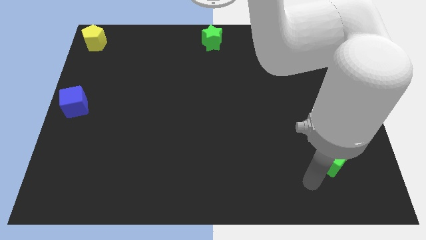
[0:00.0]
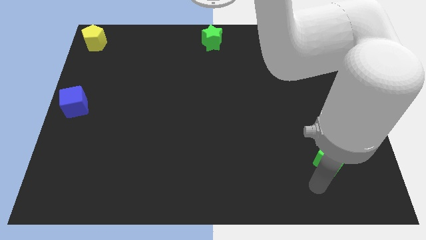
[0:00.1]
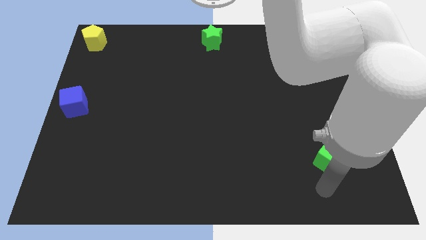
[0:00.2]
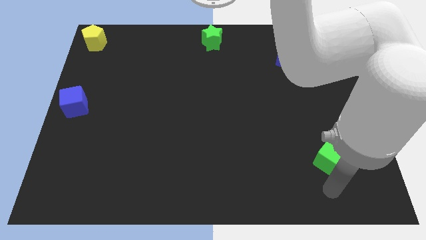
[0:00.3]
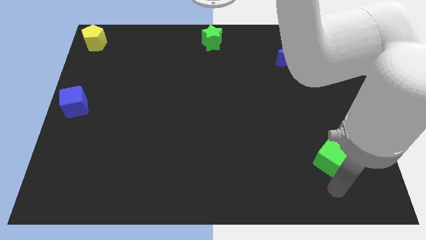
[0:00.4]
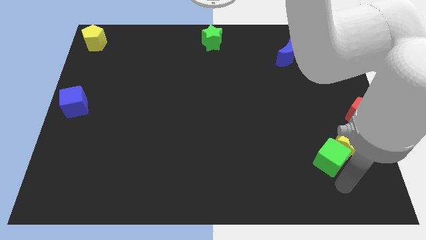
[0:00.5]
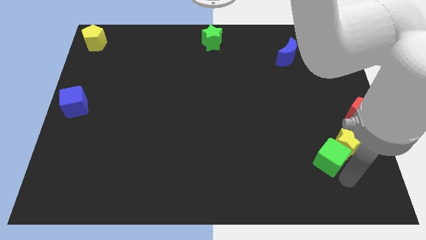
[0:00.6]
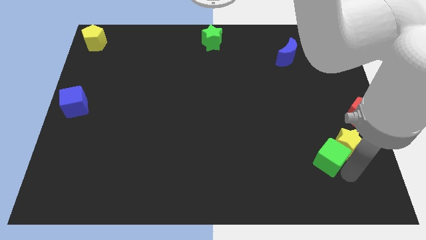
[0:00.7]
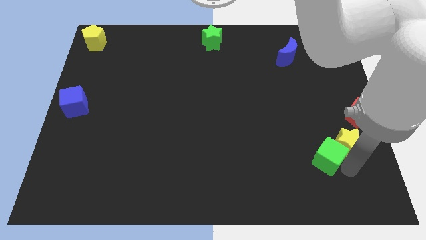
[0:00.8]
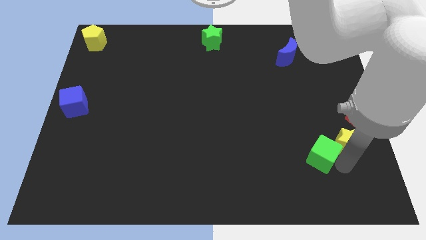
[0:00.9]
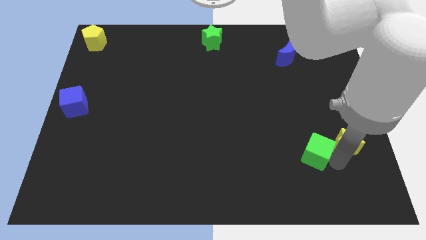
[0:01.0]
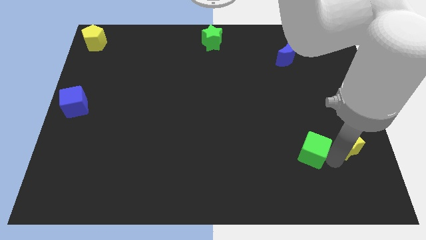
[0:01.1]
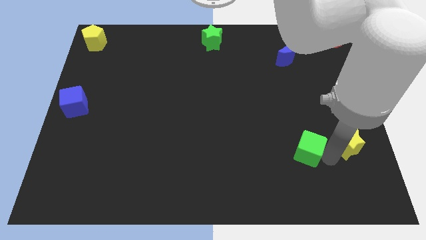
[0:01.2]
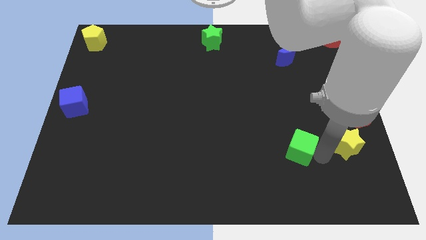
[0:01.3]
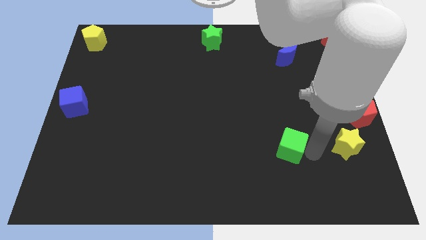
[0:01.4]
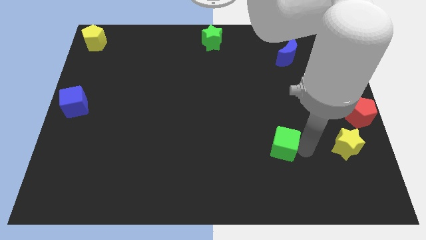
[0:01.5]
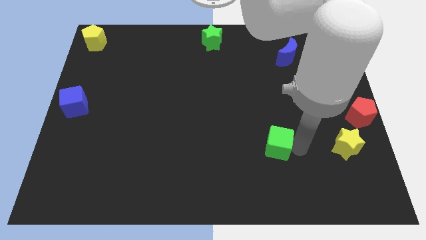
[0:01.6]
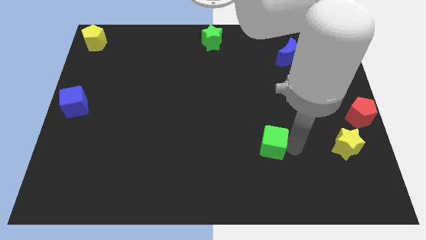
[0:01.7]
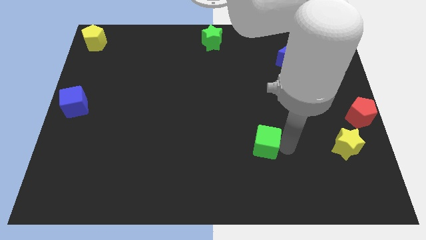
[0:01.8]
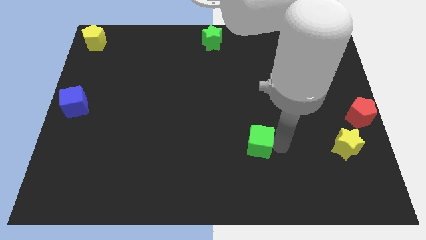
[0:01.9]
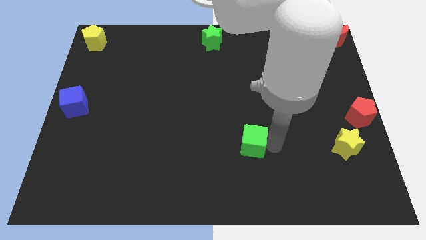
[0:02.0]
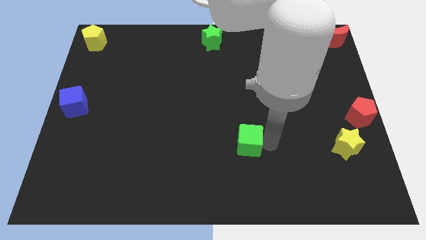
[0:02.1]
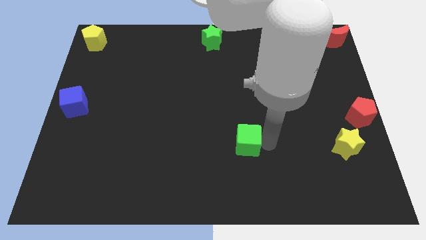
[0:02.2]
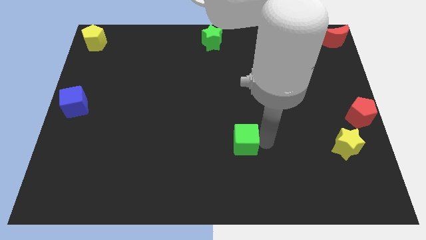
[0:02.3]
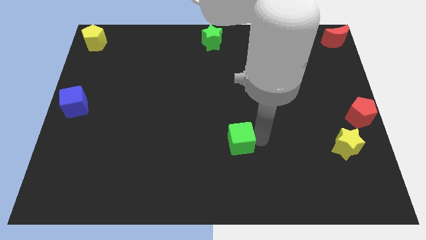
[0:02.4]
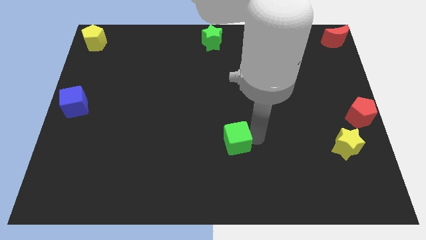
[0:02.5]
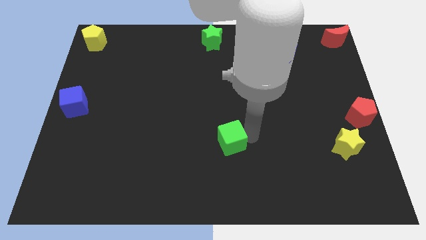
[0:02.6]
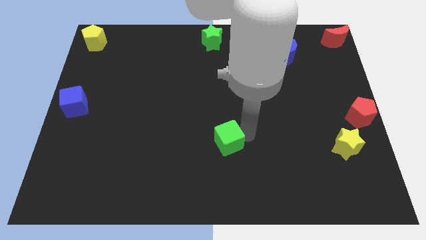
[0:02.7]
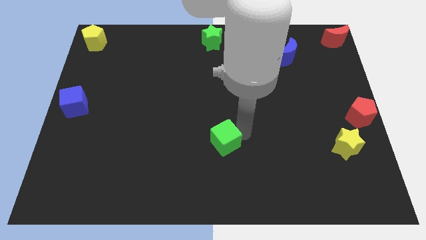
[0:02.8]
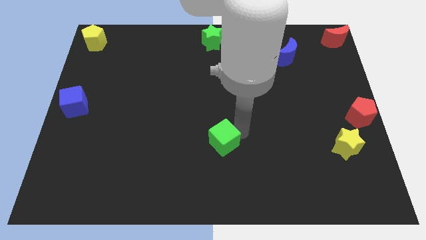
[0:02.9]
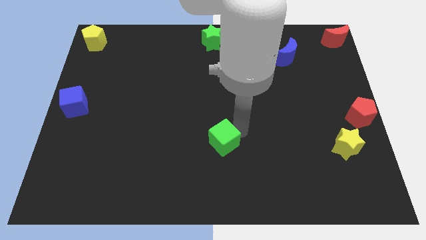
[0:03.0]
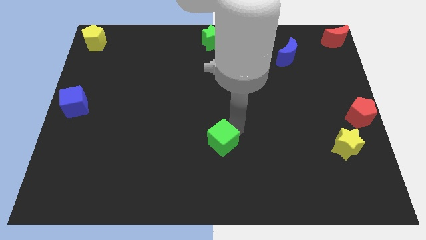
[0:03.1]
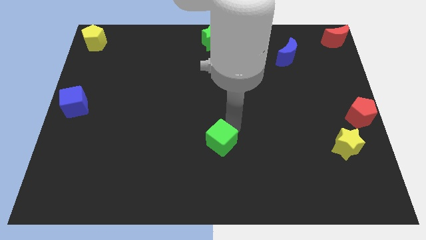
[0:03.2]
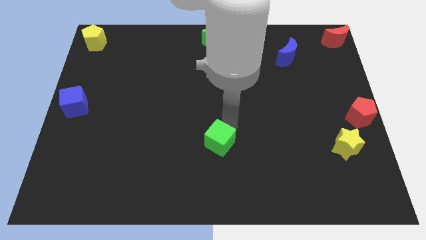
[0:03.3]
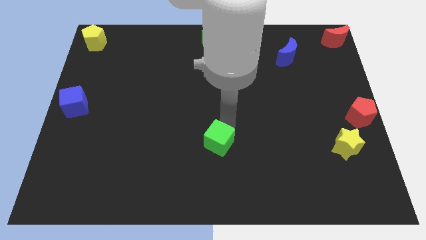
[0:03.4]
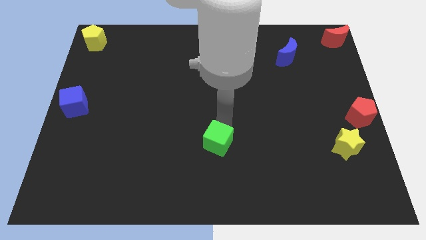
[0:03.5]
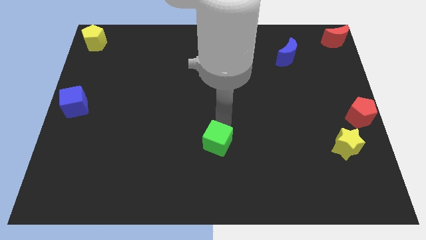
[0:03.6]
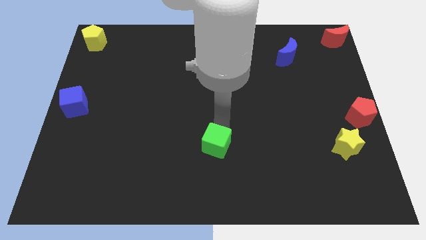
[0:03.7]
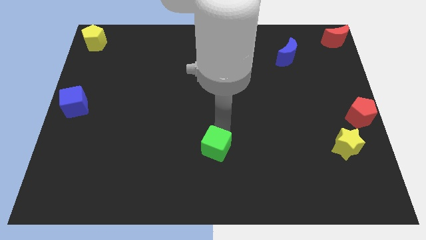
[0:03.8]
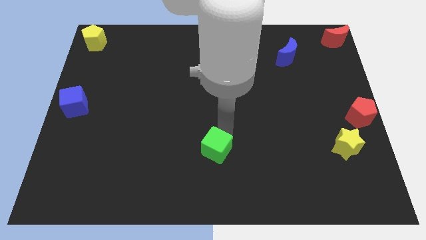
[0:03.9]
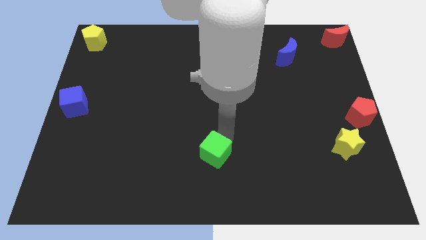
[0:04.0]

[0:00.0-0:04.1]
slide the green cube towards the center of the board

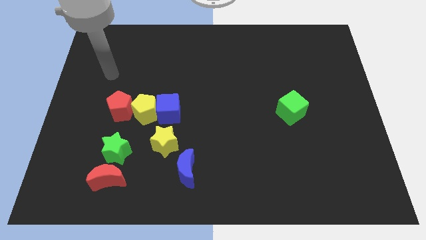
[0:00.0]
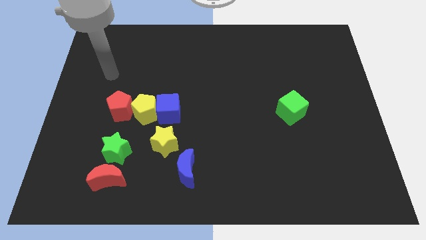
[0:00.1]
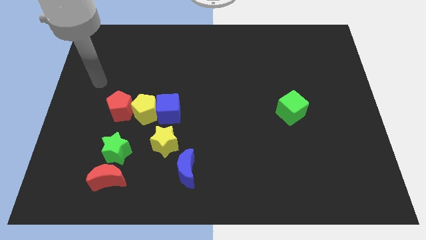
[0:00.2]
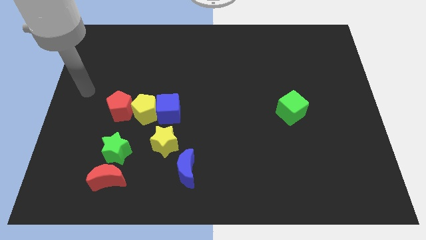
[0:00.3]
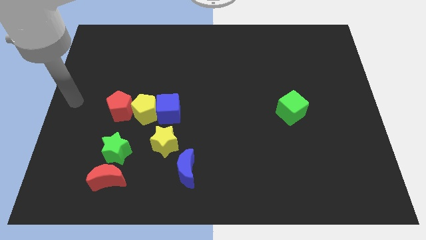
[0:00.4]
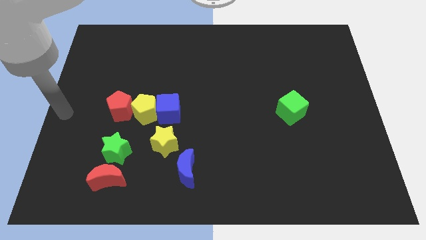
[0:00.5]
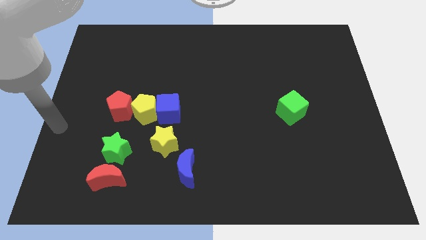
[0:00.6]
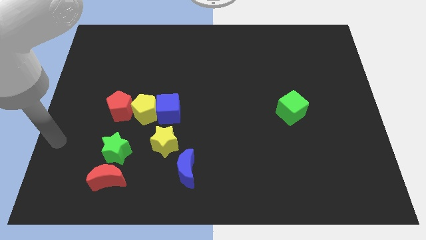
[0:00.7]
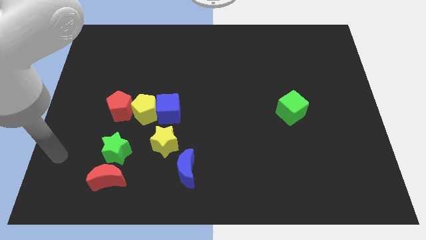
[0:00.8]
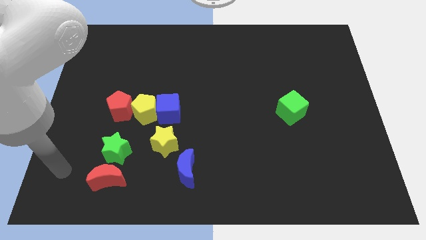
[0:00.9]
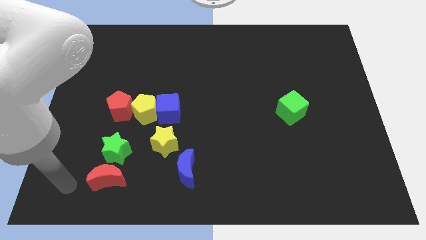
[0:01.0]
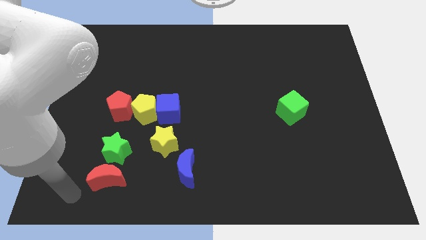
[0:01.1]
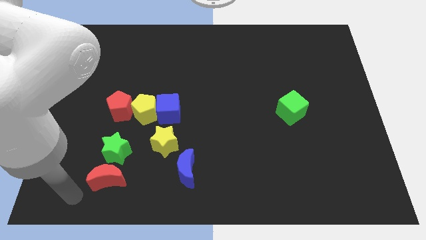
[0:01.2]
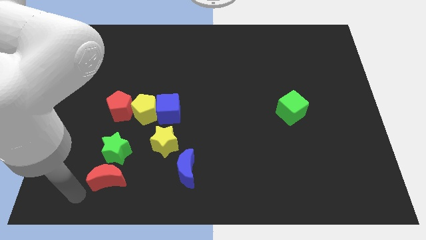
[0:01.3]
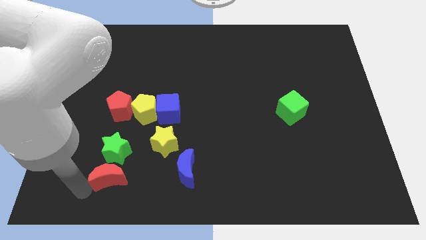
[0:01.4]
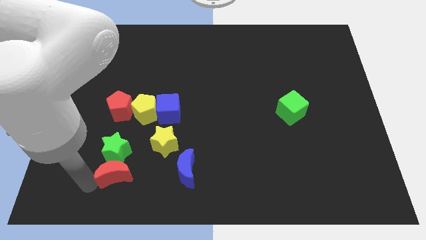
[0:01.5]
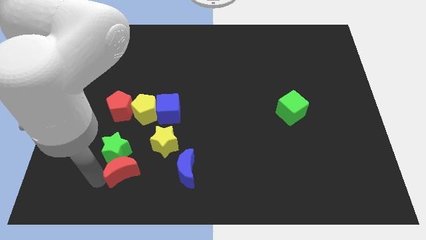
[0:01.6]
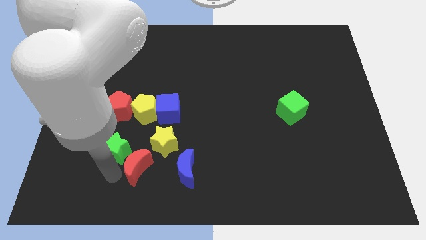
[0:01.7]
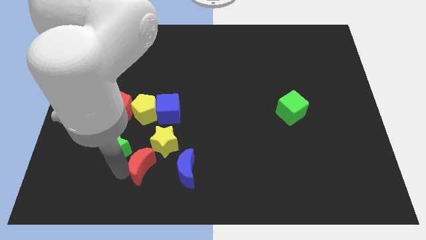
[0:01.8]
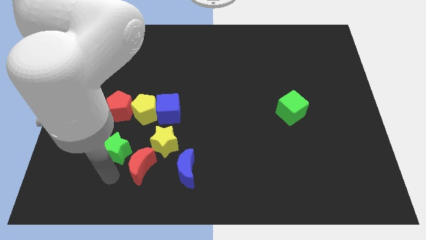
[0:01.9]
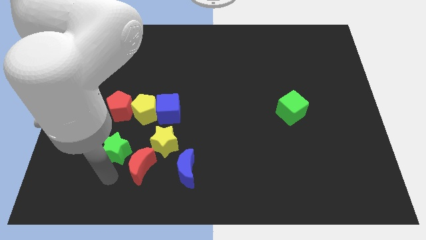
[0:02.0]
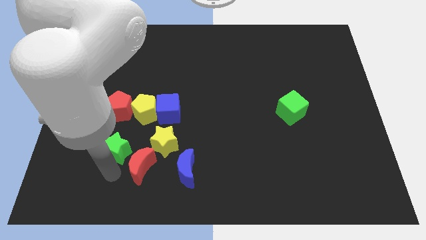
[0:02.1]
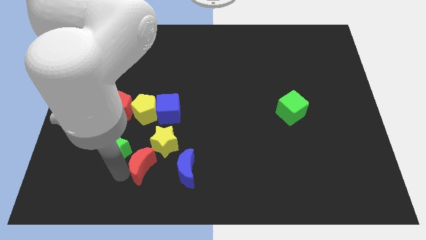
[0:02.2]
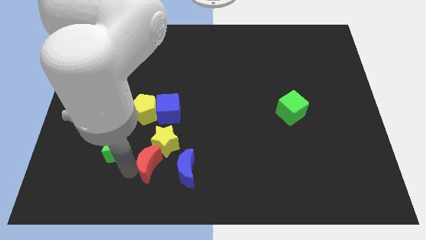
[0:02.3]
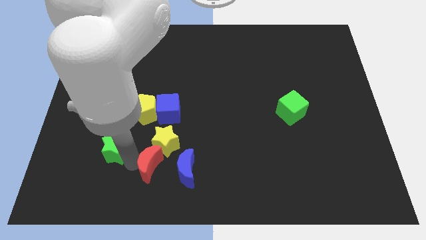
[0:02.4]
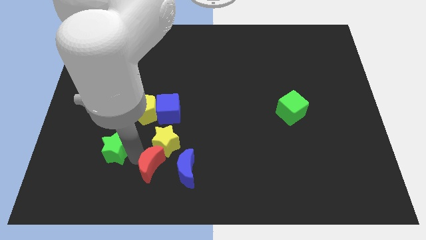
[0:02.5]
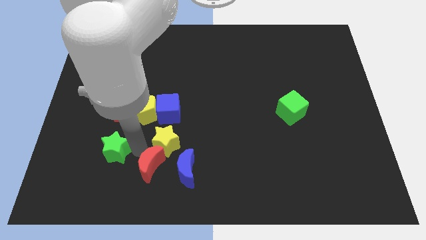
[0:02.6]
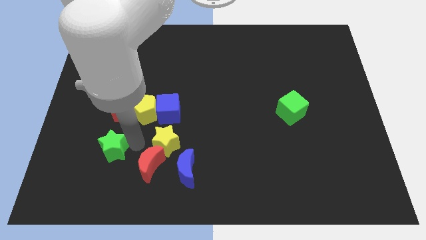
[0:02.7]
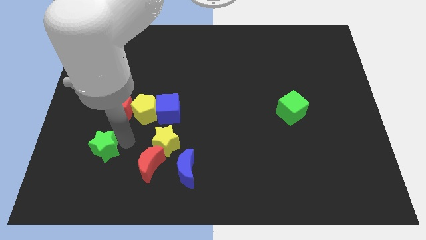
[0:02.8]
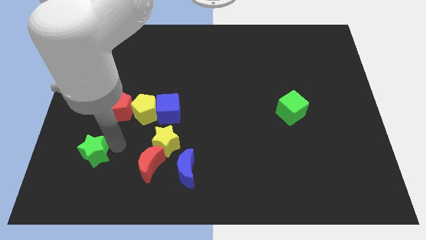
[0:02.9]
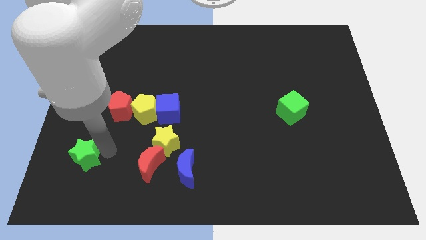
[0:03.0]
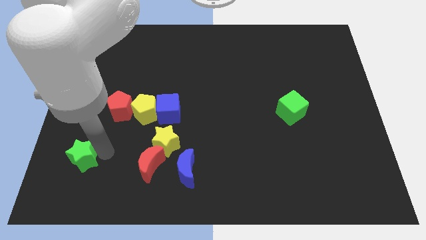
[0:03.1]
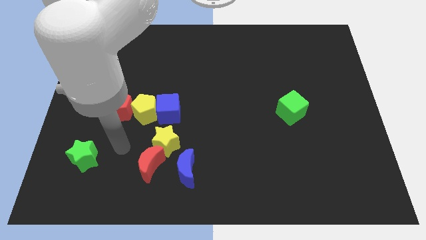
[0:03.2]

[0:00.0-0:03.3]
separate the red moon and the green star

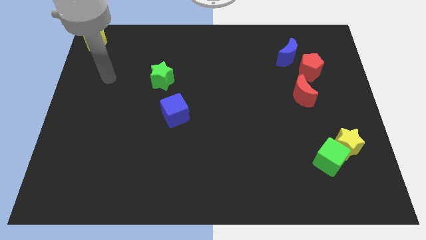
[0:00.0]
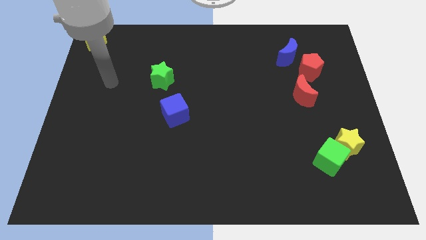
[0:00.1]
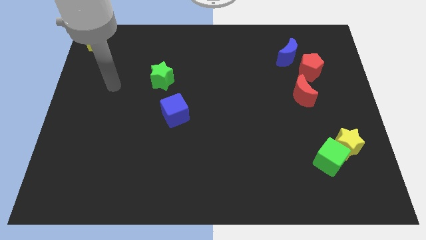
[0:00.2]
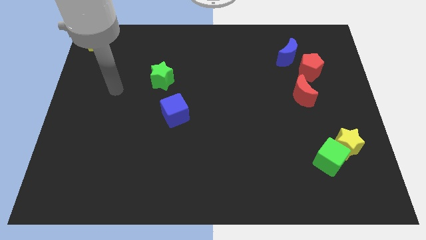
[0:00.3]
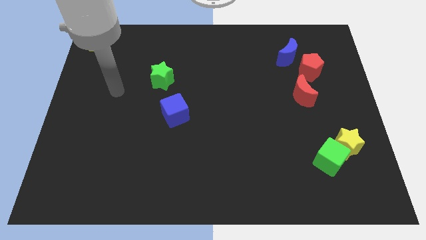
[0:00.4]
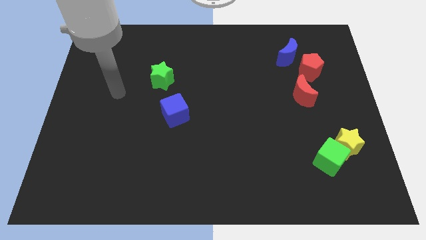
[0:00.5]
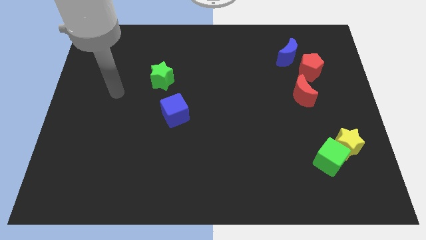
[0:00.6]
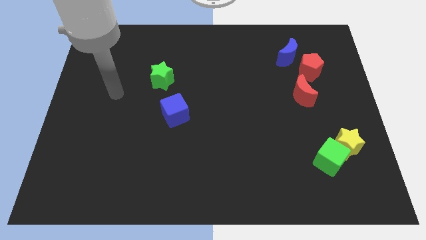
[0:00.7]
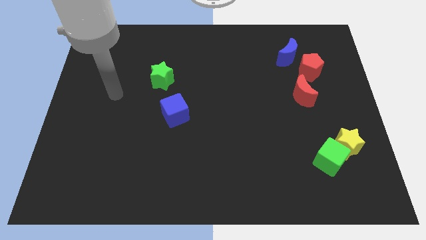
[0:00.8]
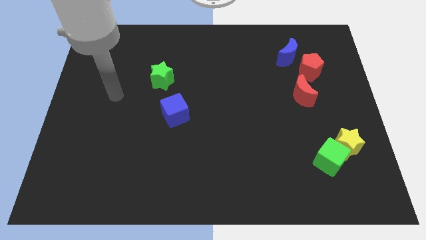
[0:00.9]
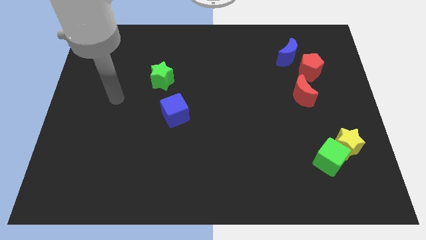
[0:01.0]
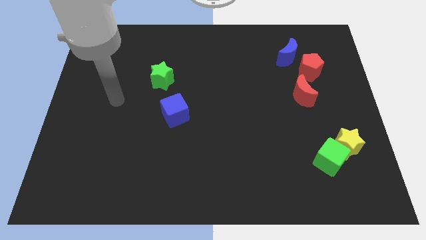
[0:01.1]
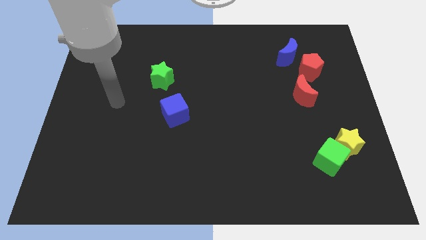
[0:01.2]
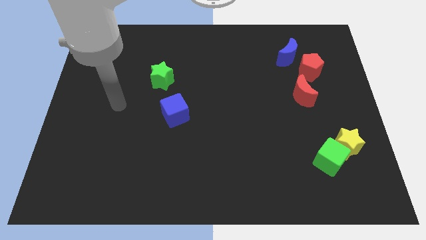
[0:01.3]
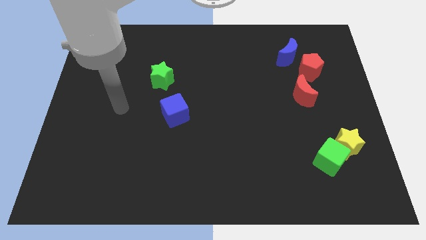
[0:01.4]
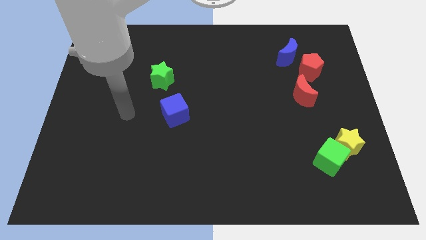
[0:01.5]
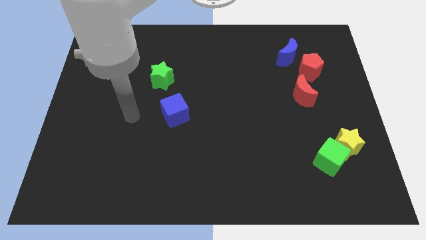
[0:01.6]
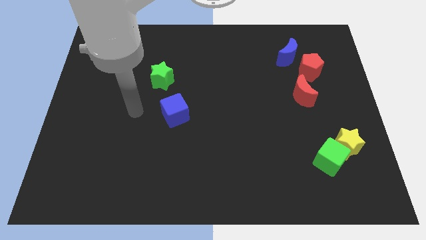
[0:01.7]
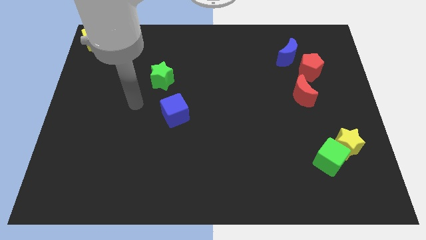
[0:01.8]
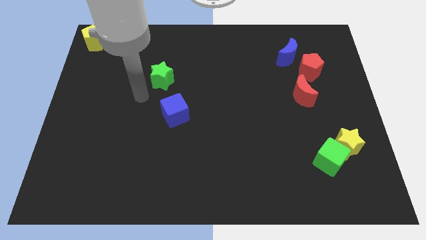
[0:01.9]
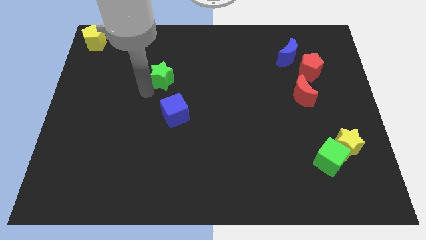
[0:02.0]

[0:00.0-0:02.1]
place your arm to the bottom left of the green star
